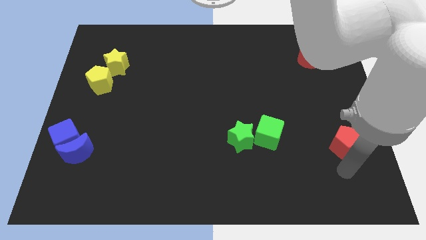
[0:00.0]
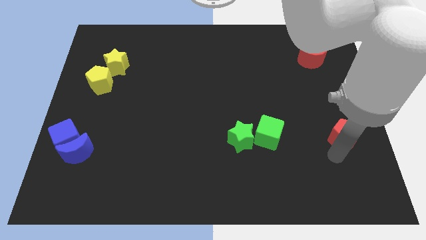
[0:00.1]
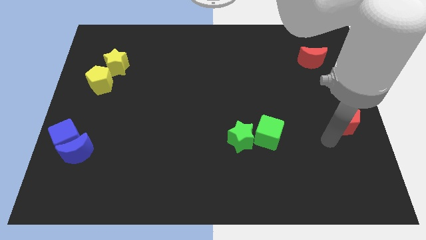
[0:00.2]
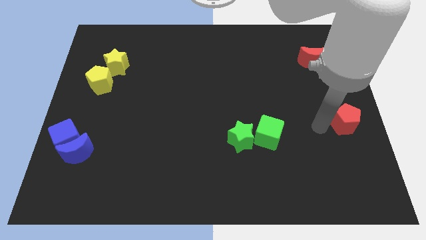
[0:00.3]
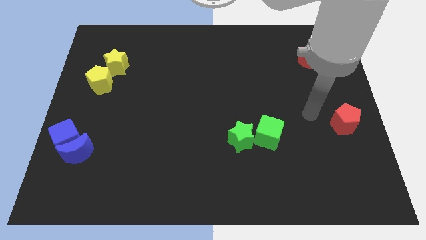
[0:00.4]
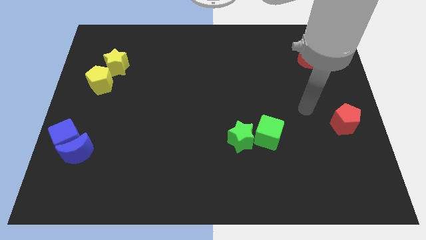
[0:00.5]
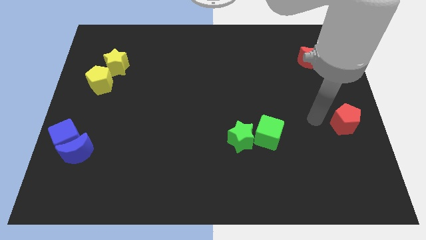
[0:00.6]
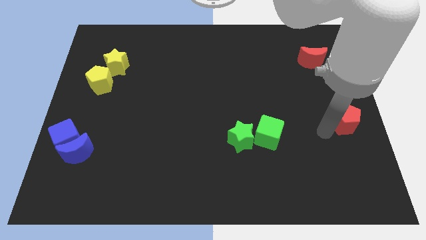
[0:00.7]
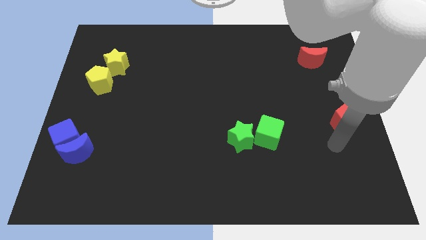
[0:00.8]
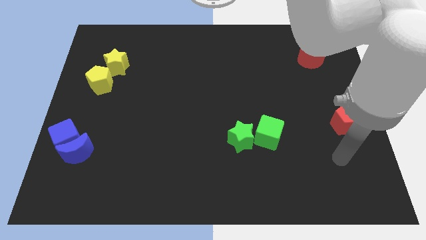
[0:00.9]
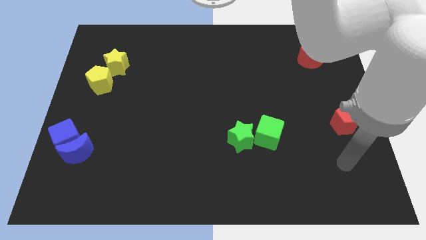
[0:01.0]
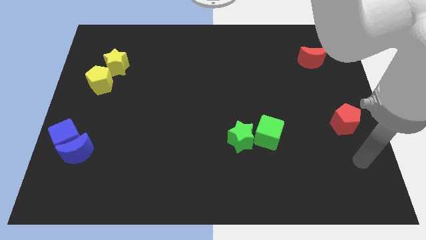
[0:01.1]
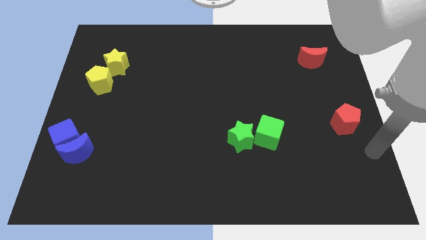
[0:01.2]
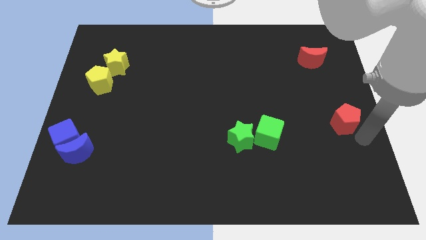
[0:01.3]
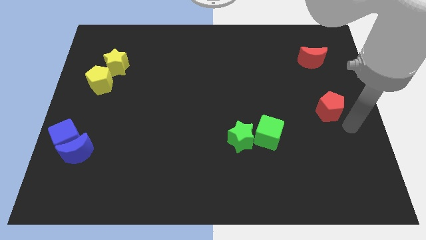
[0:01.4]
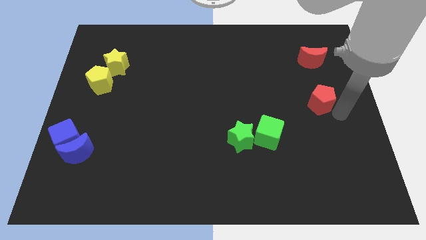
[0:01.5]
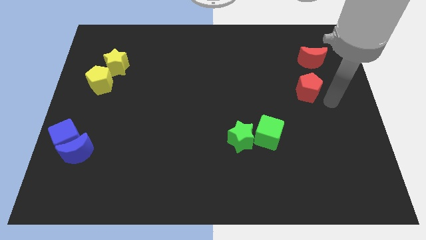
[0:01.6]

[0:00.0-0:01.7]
slide the red pentagon towards the red moon

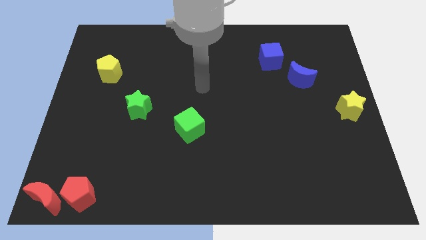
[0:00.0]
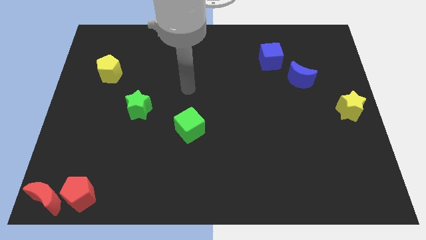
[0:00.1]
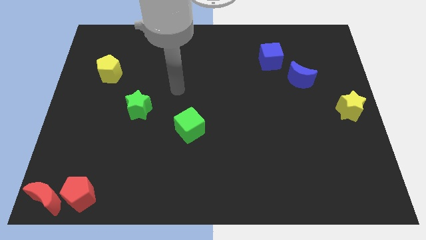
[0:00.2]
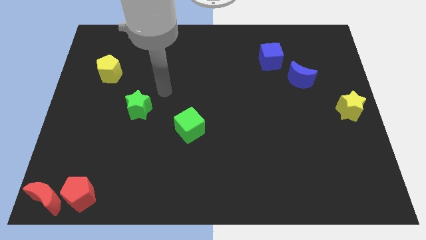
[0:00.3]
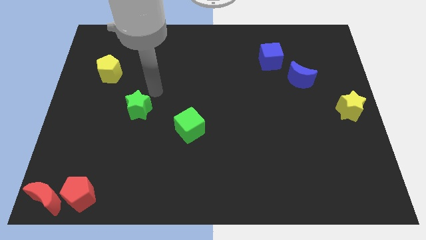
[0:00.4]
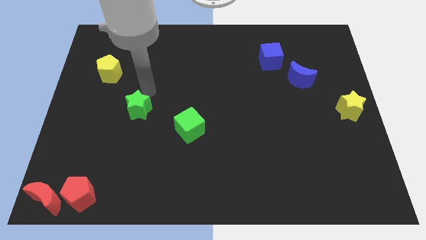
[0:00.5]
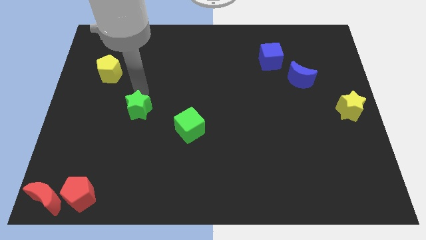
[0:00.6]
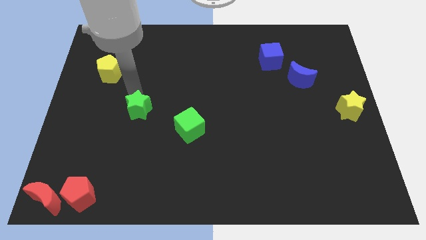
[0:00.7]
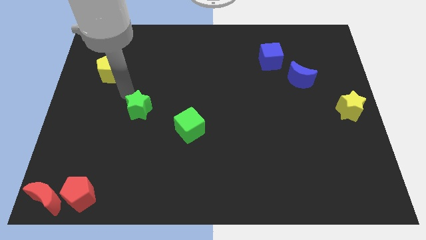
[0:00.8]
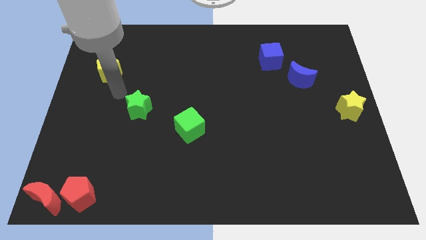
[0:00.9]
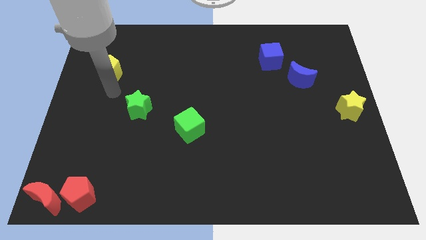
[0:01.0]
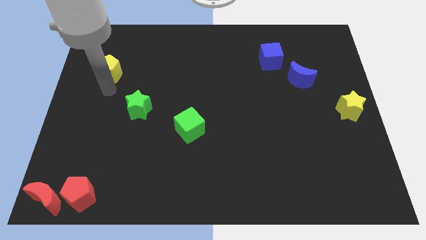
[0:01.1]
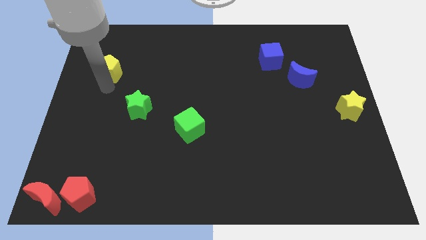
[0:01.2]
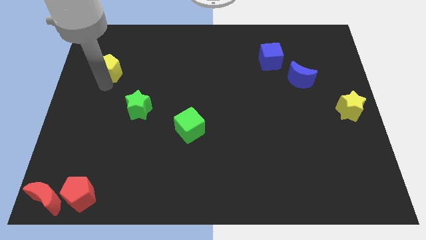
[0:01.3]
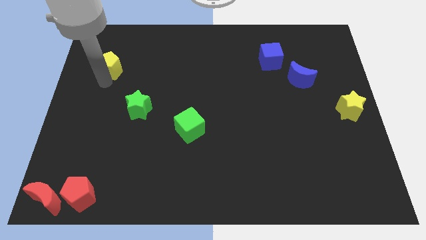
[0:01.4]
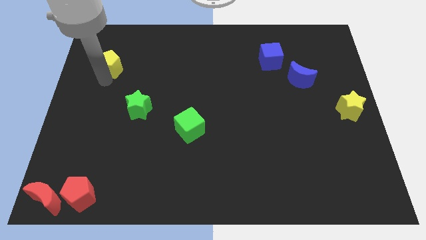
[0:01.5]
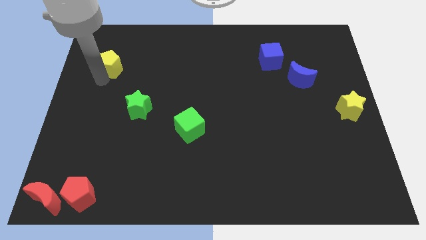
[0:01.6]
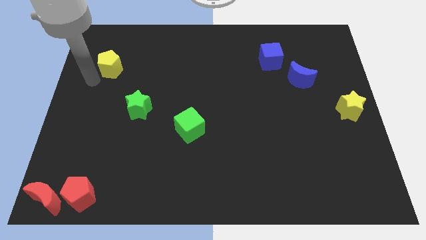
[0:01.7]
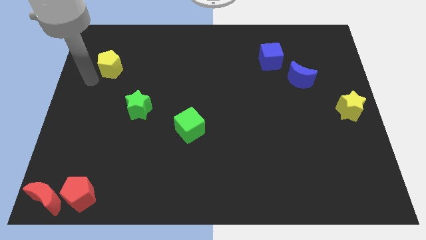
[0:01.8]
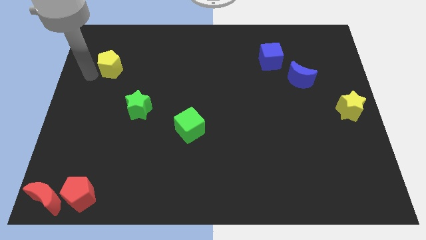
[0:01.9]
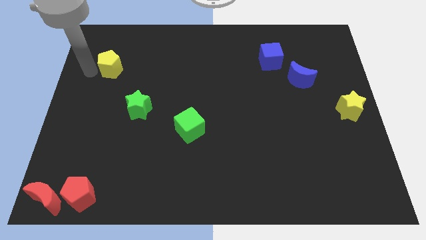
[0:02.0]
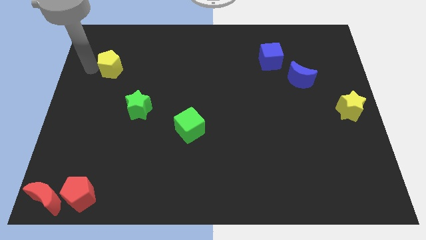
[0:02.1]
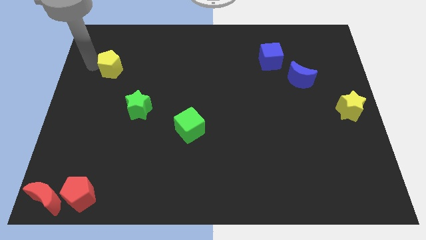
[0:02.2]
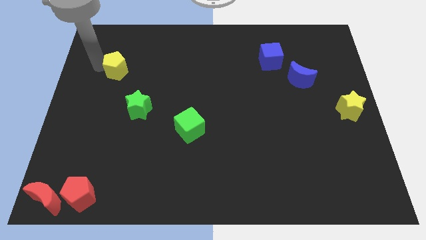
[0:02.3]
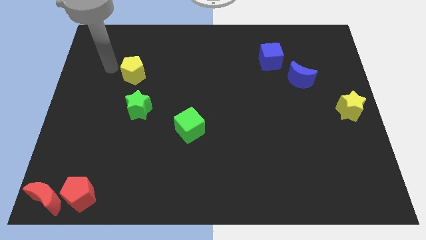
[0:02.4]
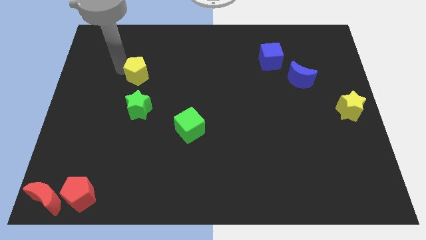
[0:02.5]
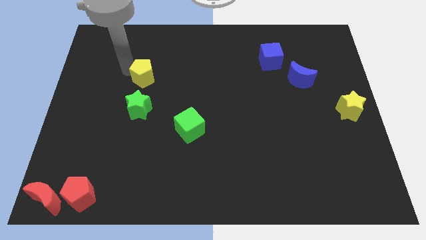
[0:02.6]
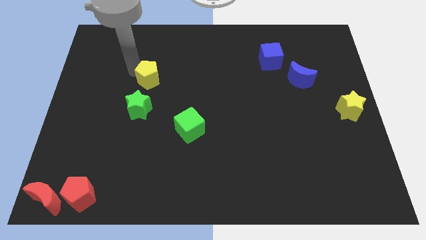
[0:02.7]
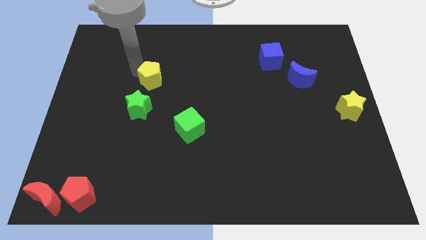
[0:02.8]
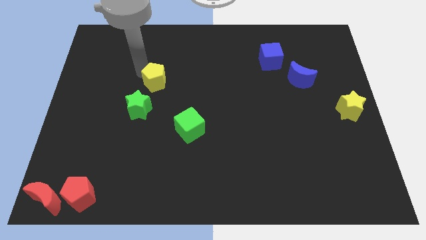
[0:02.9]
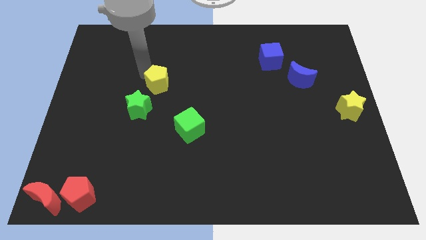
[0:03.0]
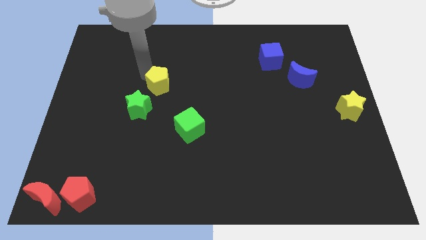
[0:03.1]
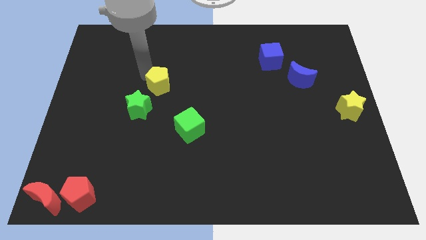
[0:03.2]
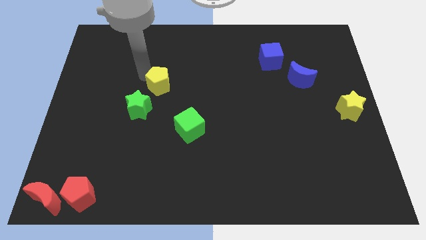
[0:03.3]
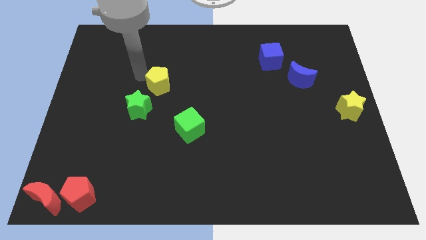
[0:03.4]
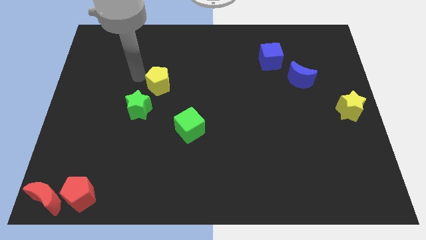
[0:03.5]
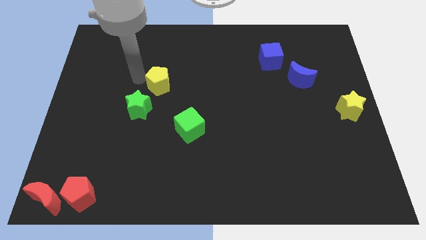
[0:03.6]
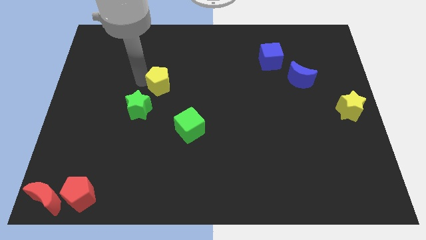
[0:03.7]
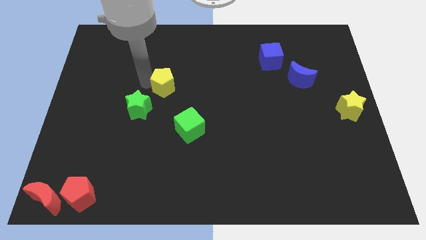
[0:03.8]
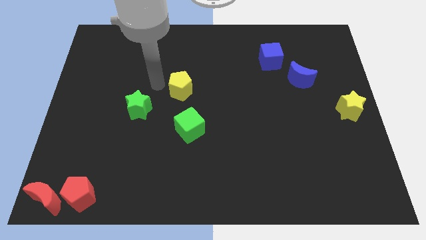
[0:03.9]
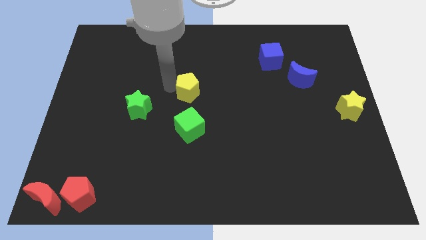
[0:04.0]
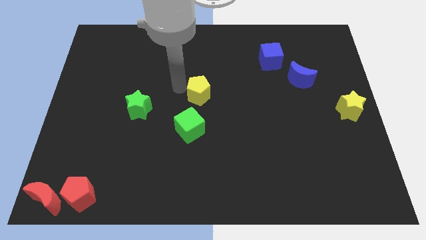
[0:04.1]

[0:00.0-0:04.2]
push the yellow pentagon above the green cube

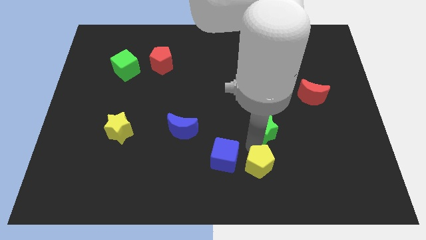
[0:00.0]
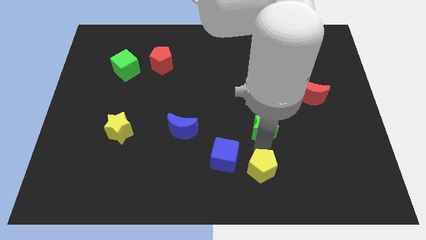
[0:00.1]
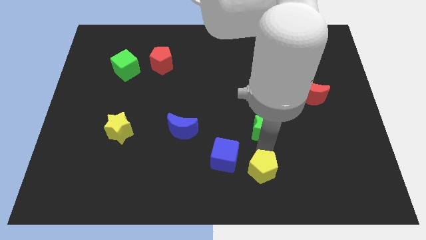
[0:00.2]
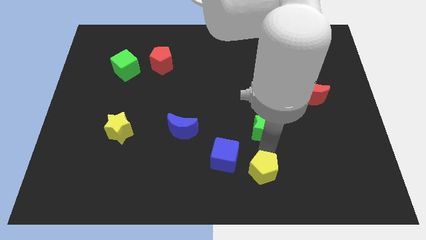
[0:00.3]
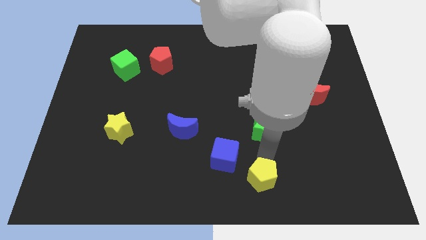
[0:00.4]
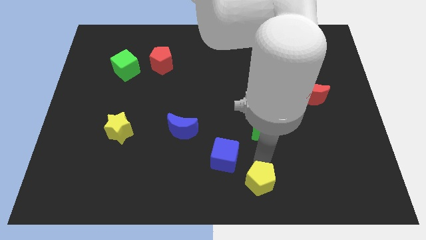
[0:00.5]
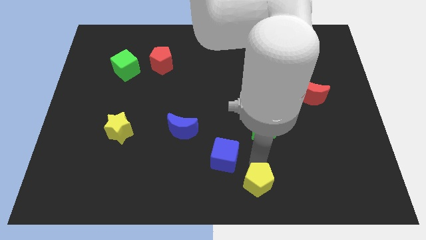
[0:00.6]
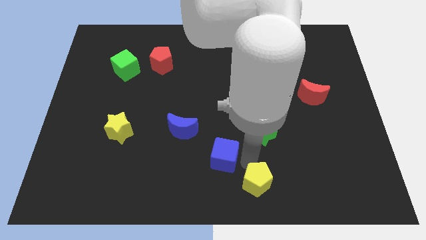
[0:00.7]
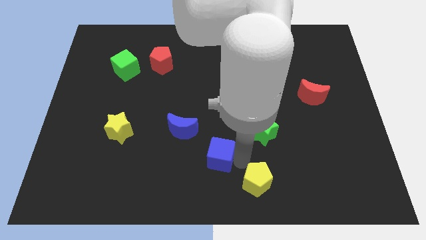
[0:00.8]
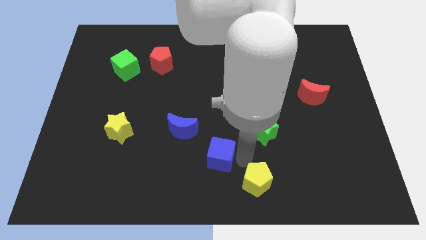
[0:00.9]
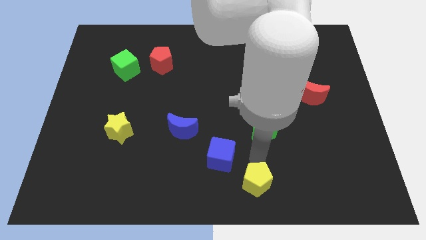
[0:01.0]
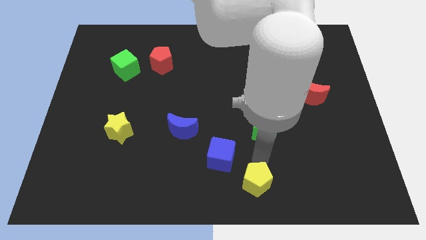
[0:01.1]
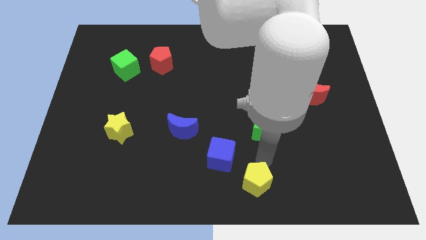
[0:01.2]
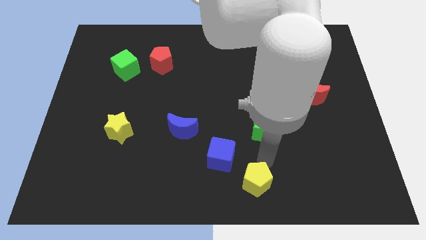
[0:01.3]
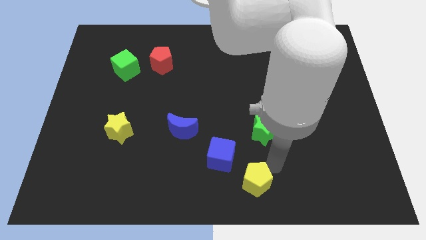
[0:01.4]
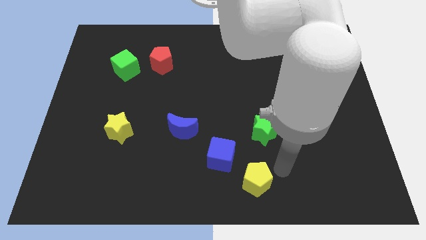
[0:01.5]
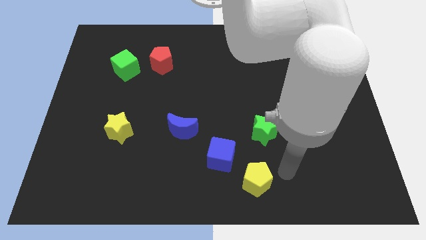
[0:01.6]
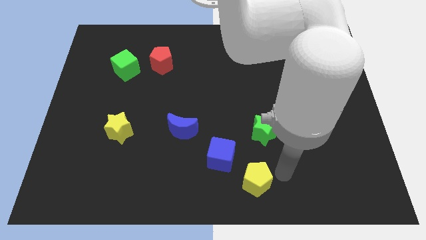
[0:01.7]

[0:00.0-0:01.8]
move the yellow pentagon slightly to the bottom

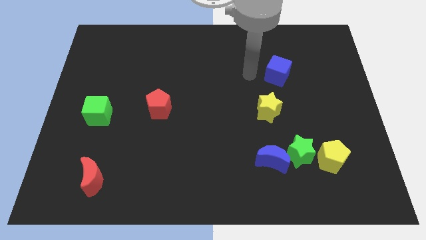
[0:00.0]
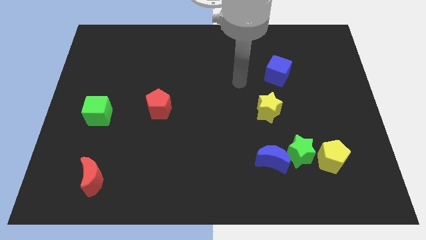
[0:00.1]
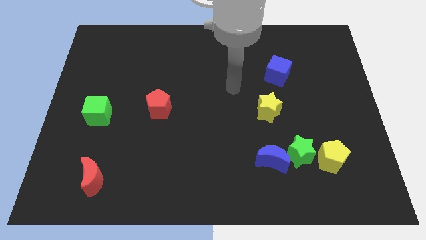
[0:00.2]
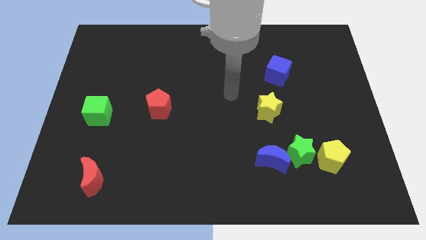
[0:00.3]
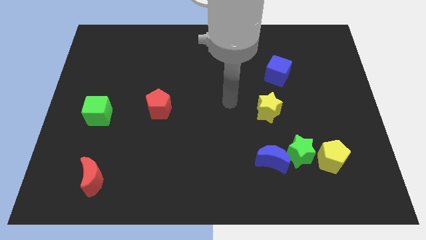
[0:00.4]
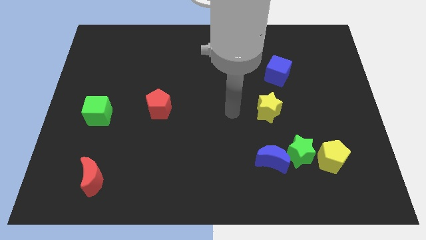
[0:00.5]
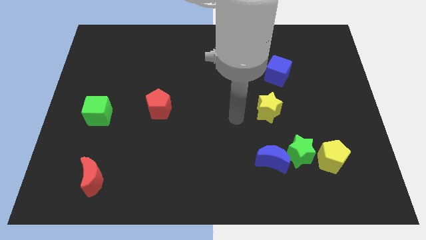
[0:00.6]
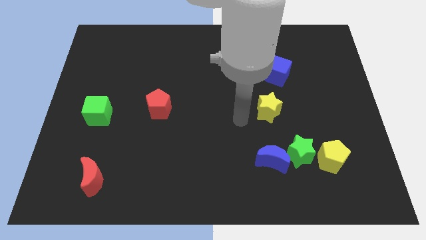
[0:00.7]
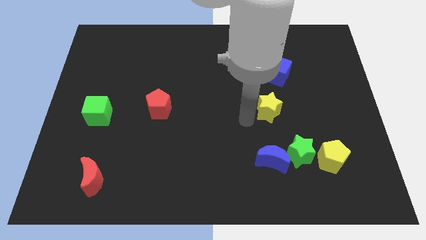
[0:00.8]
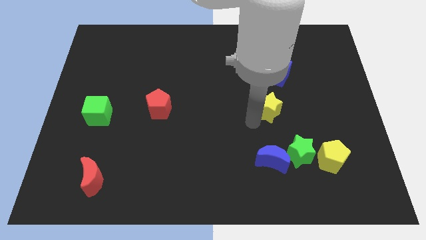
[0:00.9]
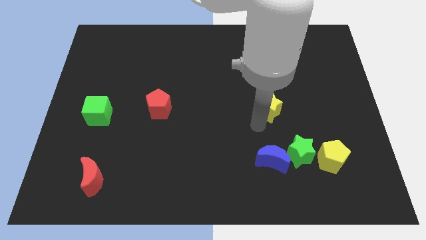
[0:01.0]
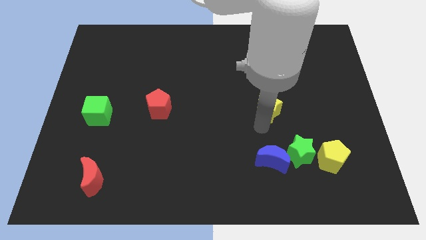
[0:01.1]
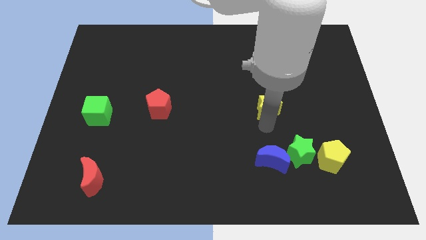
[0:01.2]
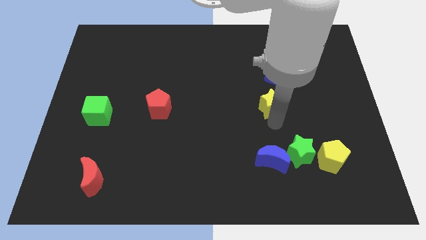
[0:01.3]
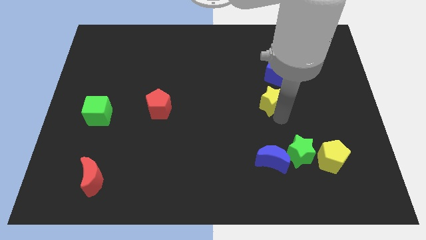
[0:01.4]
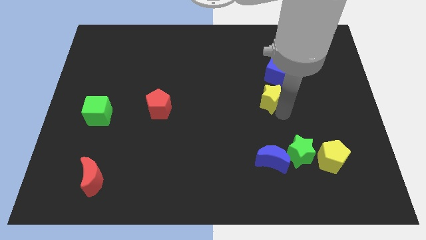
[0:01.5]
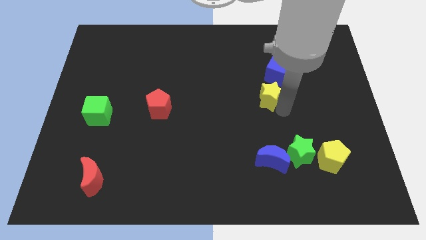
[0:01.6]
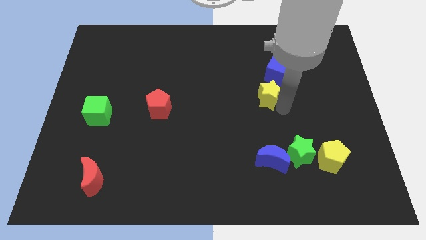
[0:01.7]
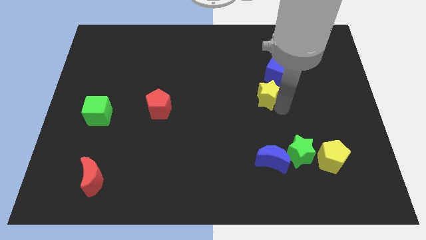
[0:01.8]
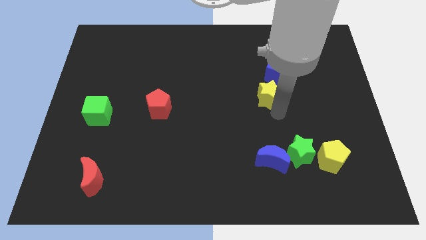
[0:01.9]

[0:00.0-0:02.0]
move the yellow star closer to the blue cube
